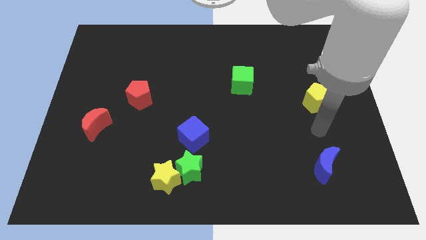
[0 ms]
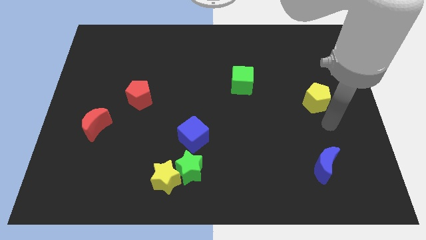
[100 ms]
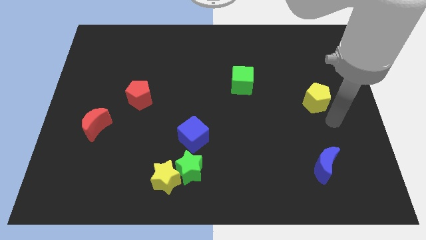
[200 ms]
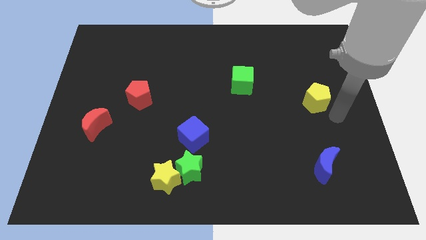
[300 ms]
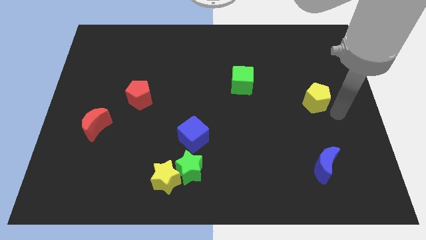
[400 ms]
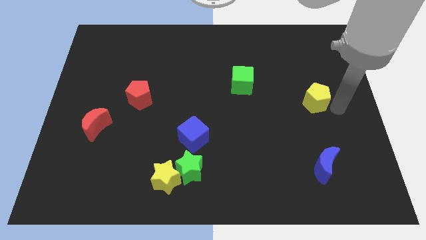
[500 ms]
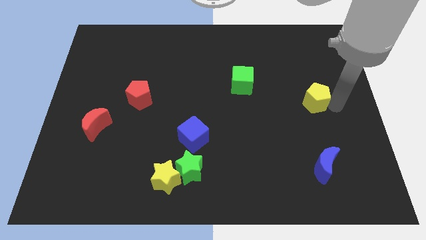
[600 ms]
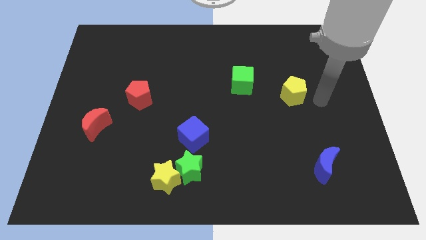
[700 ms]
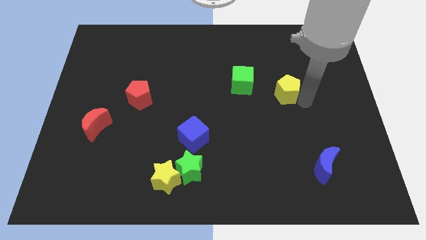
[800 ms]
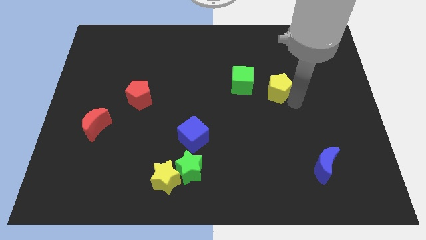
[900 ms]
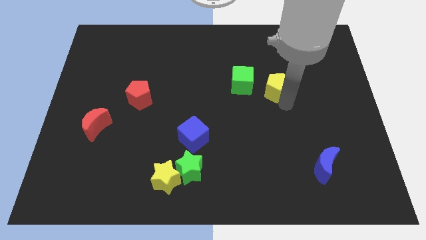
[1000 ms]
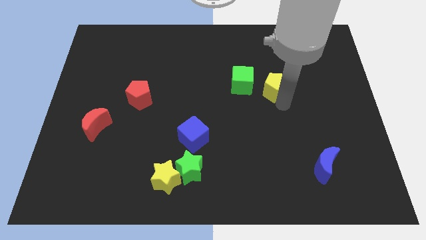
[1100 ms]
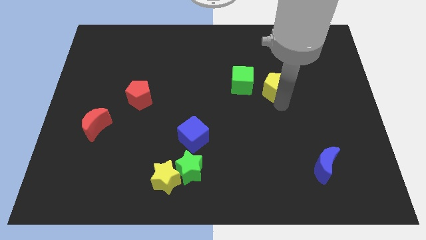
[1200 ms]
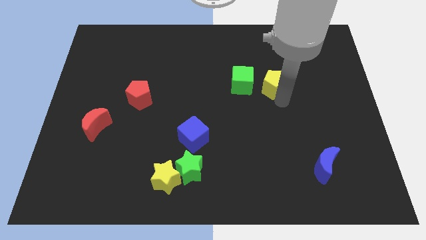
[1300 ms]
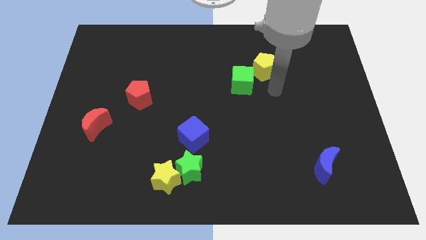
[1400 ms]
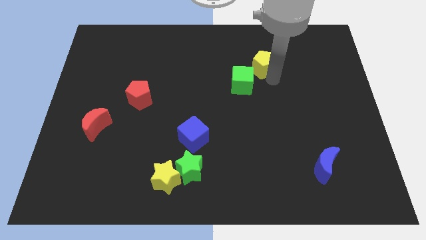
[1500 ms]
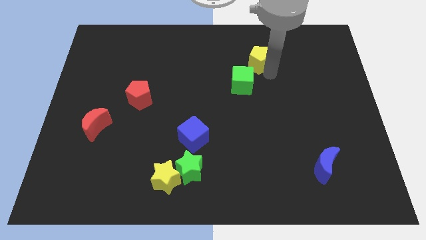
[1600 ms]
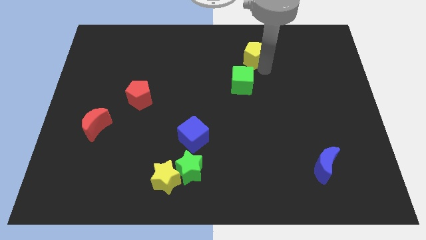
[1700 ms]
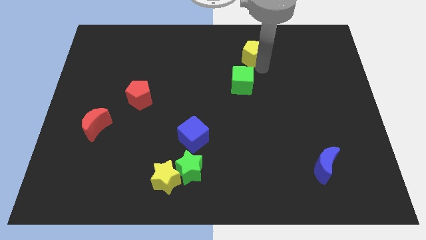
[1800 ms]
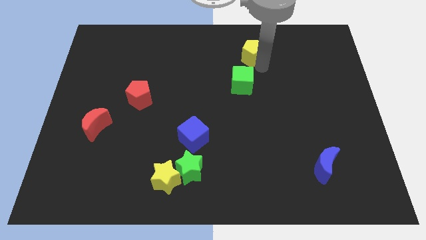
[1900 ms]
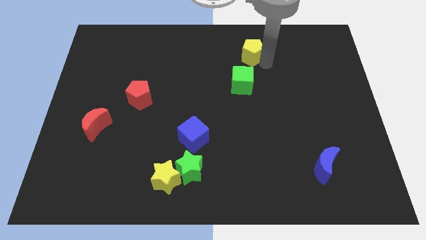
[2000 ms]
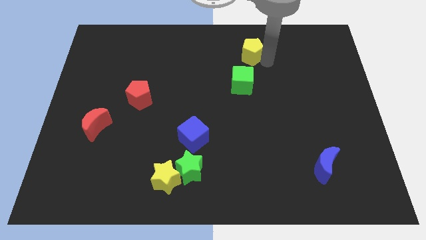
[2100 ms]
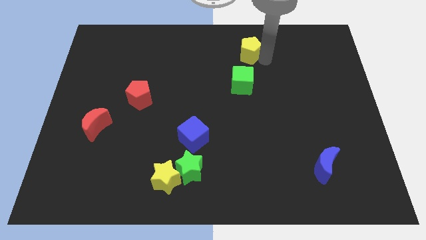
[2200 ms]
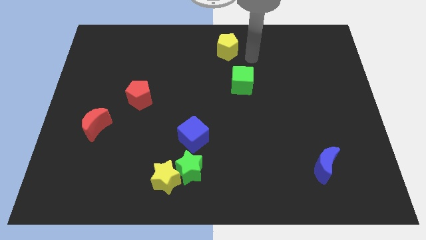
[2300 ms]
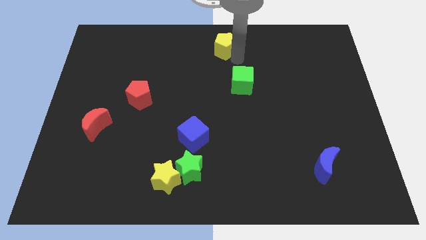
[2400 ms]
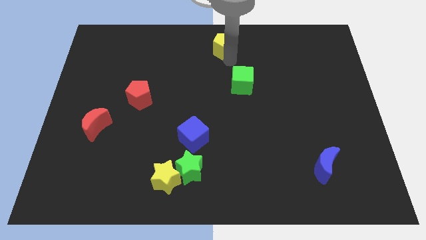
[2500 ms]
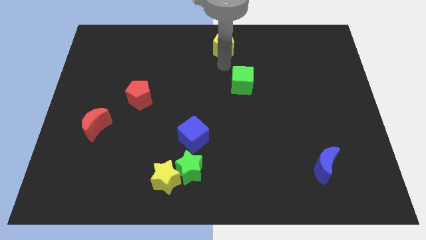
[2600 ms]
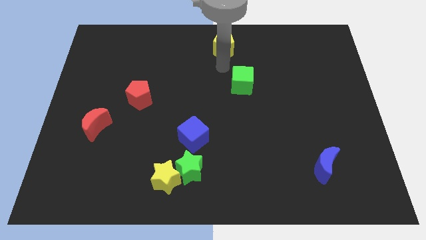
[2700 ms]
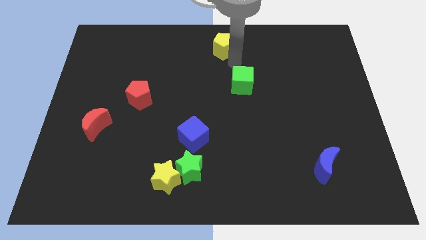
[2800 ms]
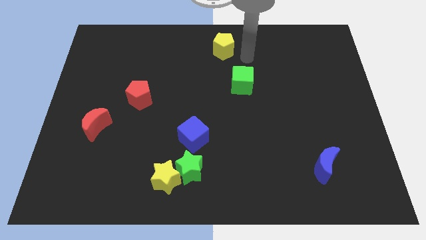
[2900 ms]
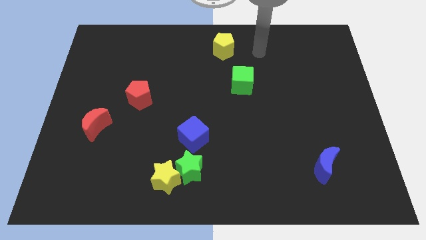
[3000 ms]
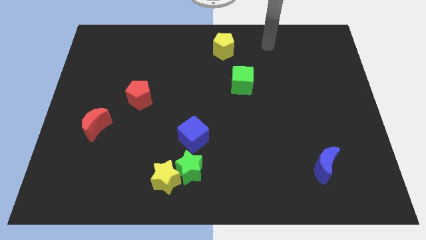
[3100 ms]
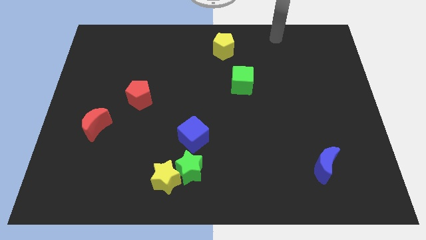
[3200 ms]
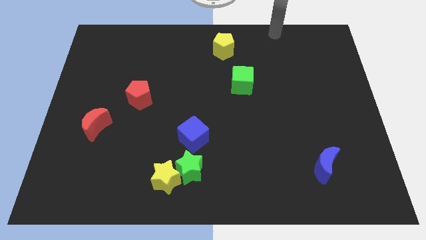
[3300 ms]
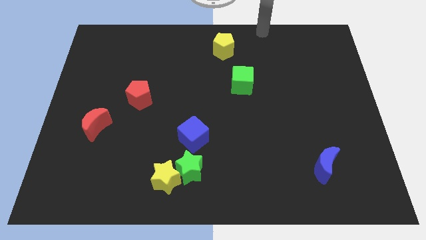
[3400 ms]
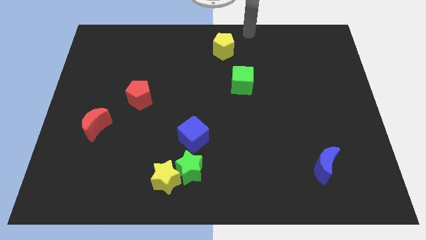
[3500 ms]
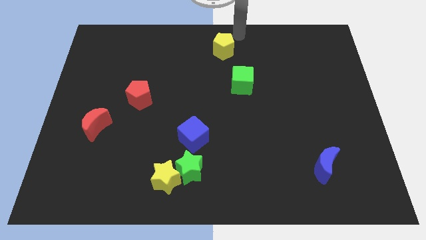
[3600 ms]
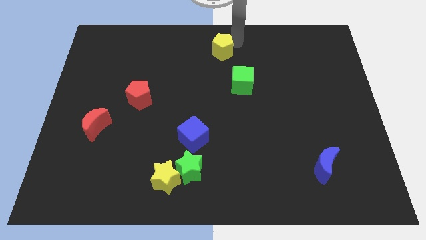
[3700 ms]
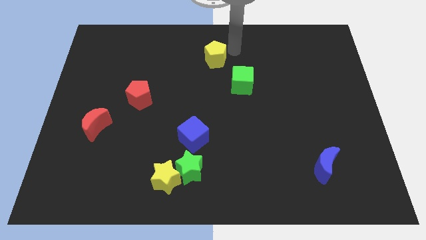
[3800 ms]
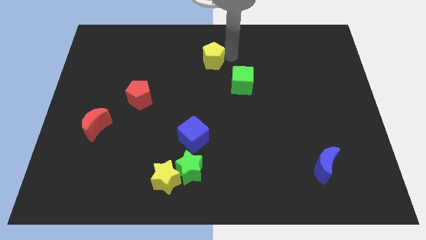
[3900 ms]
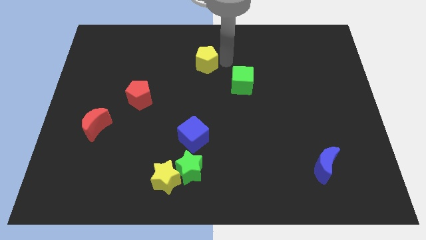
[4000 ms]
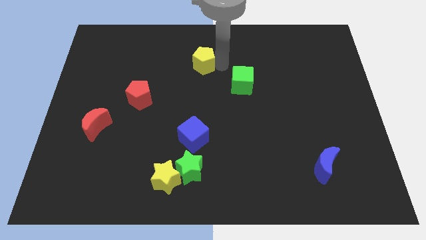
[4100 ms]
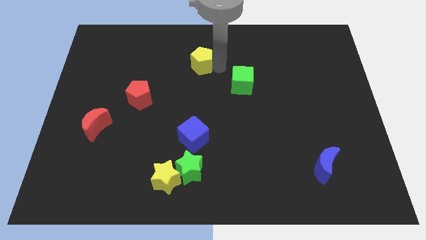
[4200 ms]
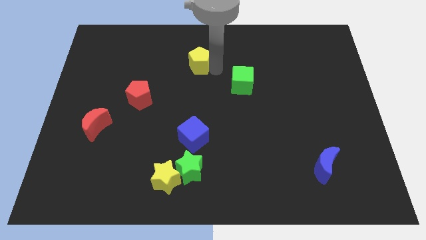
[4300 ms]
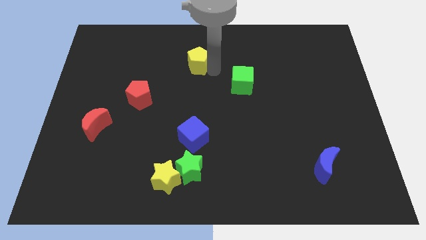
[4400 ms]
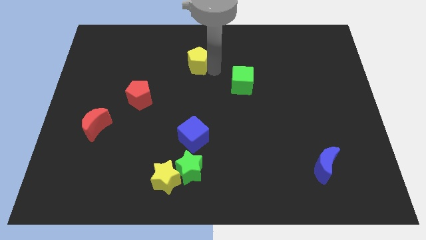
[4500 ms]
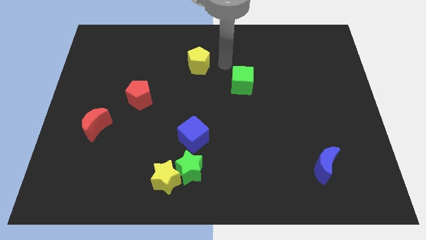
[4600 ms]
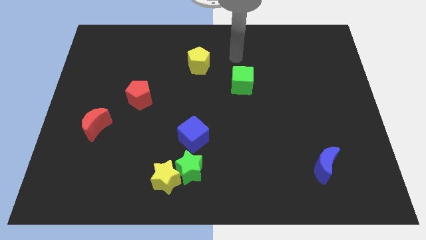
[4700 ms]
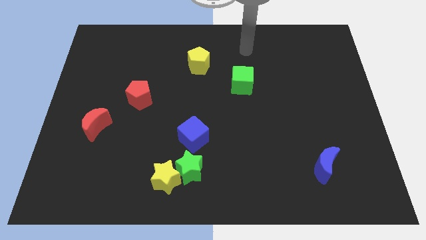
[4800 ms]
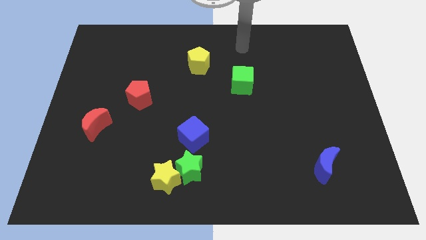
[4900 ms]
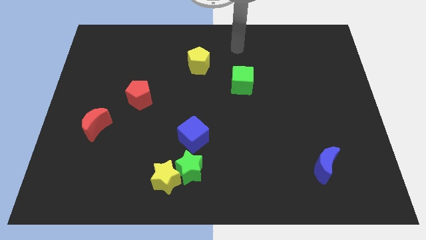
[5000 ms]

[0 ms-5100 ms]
slide yellow pentagon to top left of green cube

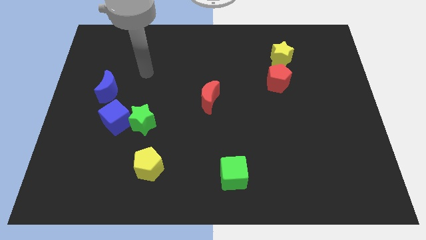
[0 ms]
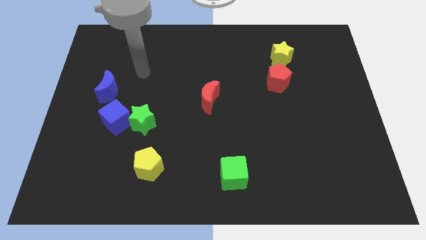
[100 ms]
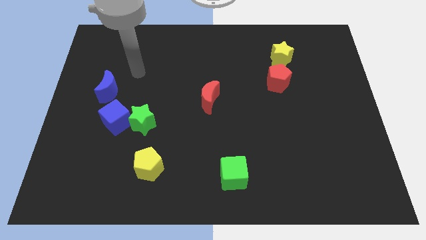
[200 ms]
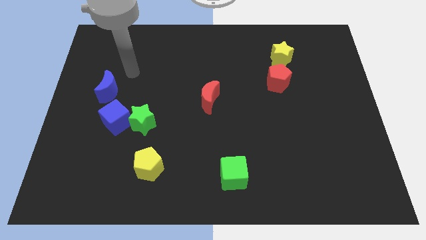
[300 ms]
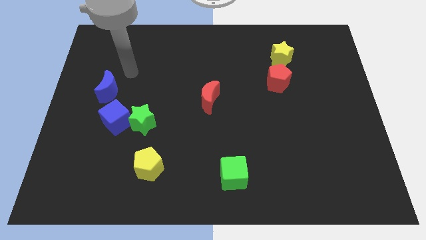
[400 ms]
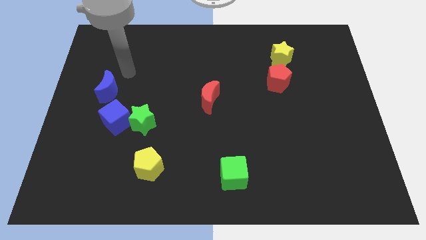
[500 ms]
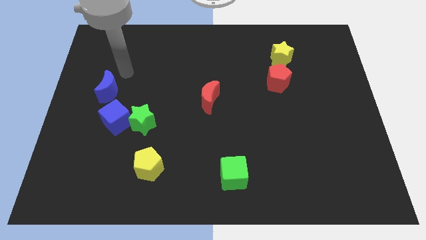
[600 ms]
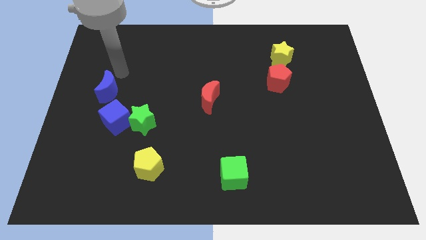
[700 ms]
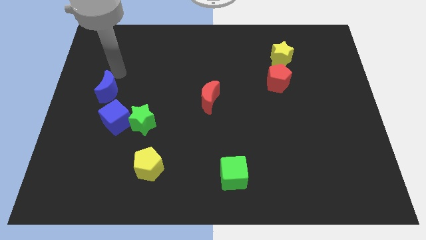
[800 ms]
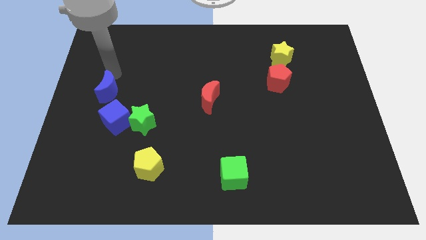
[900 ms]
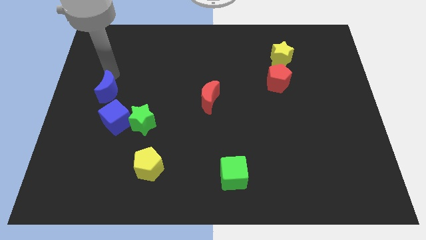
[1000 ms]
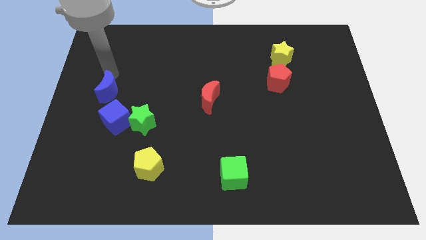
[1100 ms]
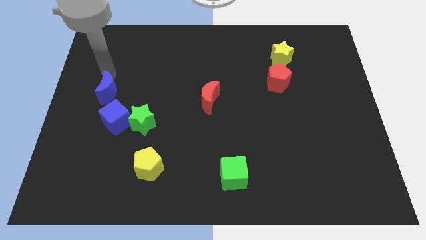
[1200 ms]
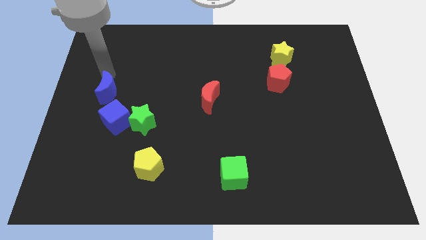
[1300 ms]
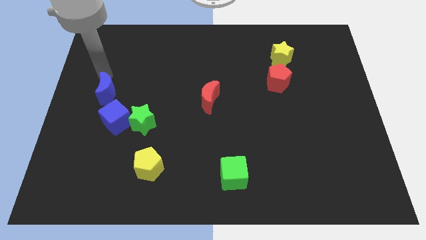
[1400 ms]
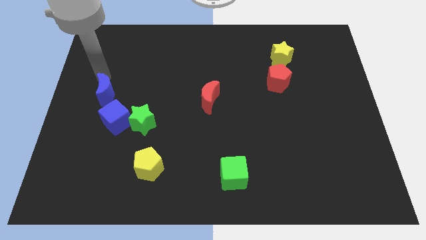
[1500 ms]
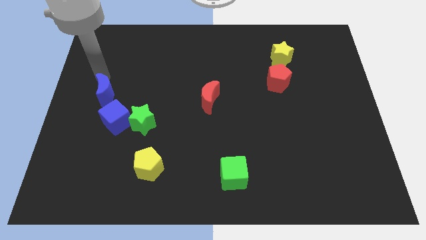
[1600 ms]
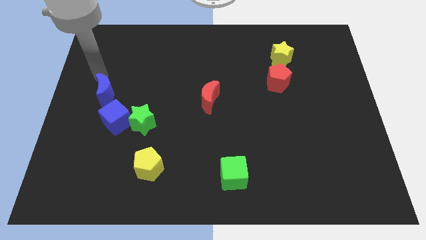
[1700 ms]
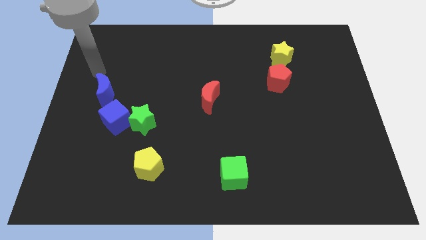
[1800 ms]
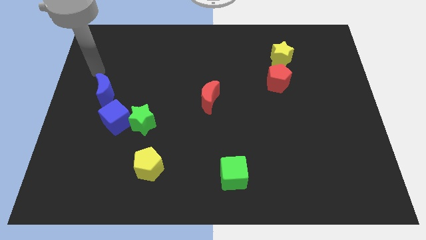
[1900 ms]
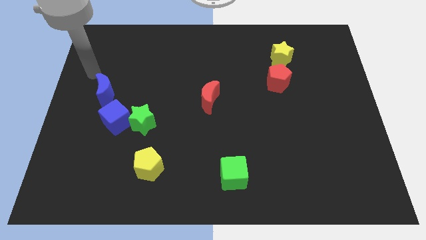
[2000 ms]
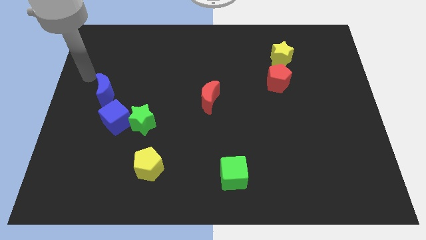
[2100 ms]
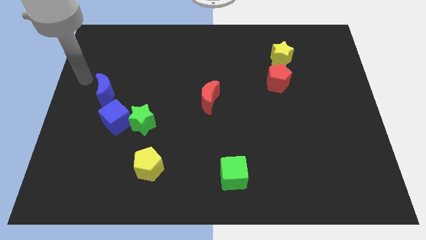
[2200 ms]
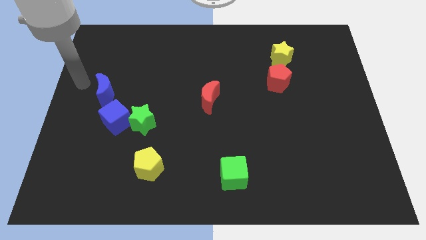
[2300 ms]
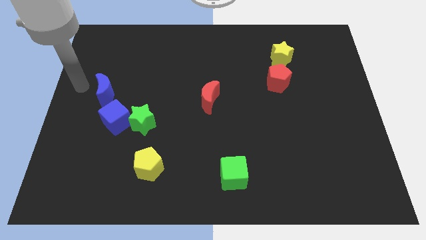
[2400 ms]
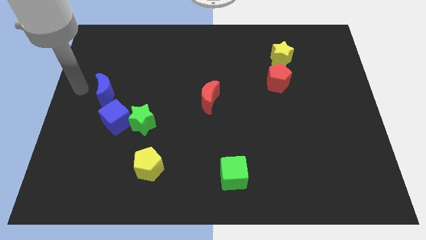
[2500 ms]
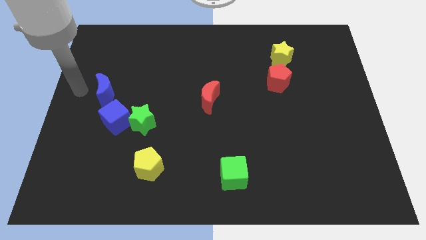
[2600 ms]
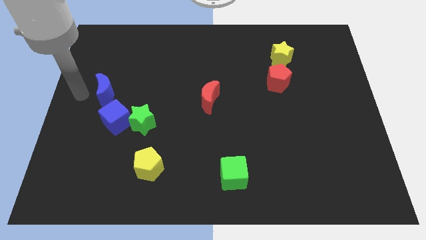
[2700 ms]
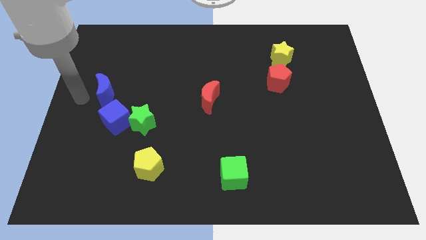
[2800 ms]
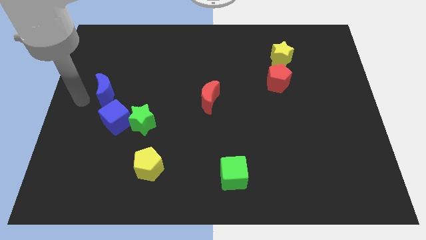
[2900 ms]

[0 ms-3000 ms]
move the blue moon slightly close to the blue cube

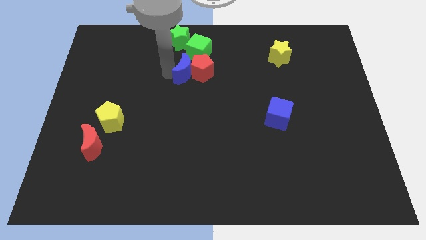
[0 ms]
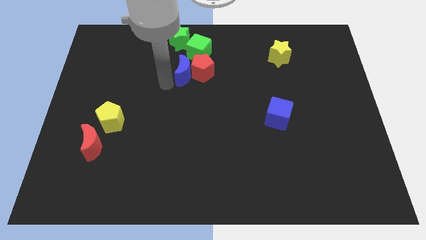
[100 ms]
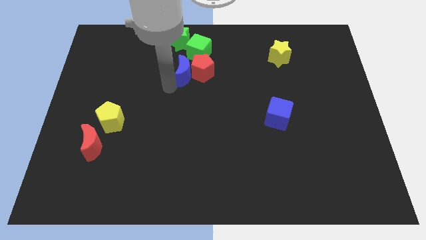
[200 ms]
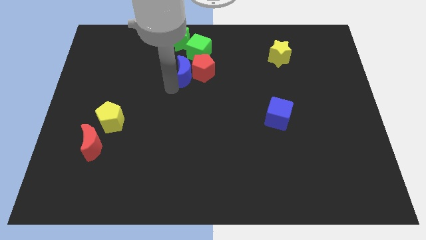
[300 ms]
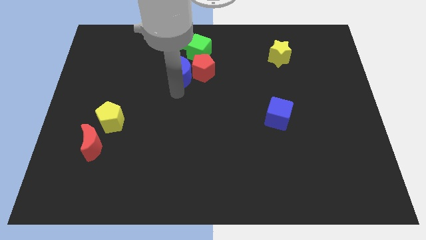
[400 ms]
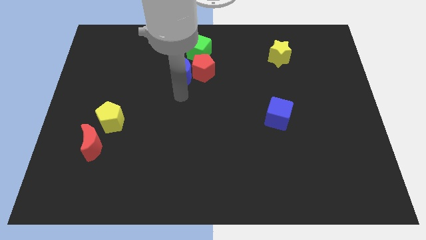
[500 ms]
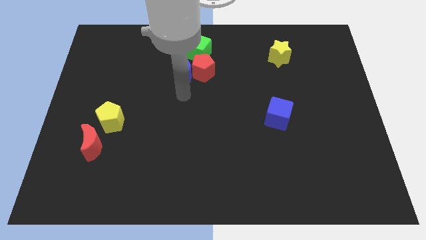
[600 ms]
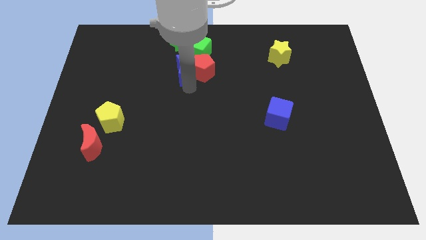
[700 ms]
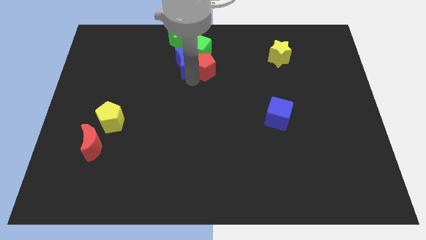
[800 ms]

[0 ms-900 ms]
move your arm to the bottom of red pentagon

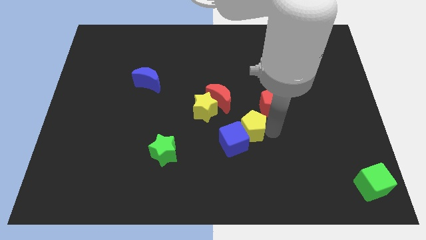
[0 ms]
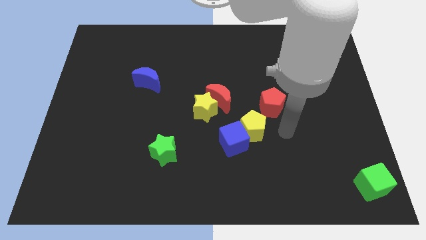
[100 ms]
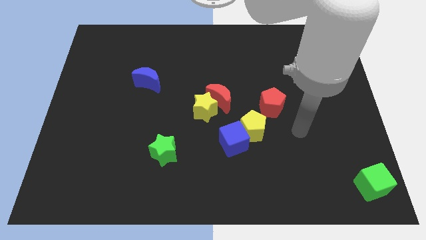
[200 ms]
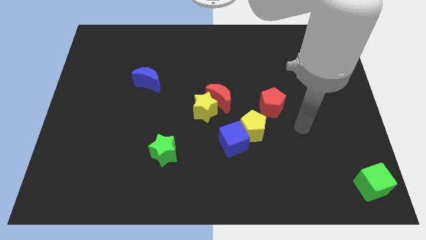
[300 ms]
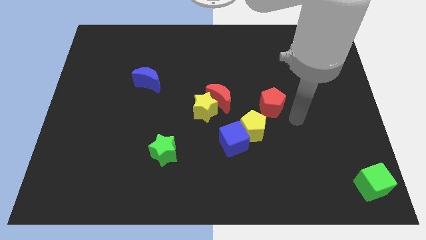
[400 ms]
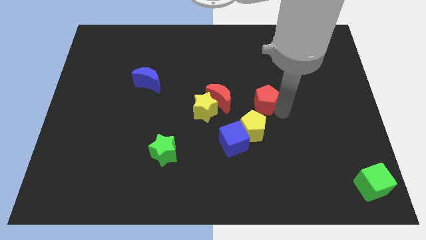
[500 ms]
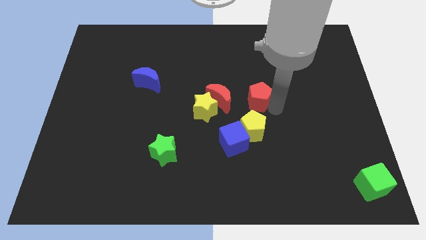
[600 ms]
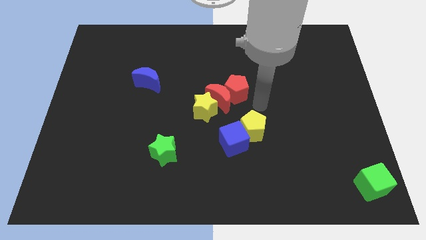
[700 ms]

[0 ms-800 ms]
push the red pentagon towards the red moon
